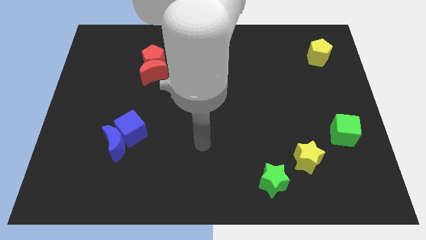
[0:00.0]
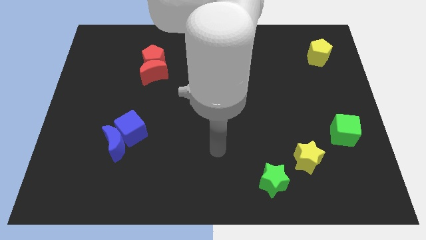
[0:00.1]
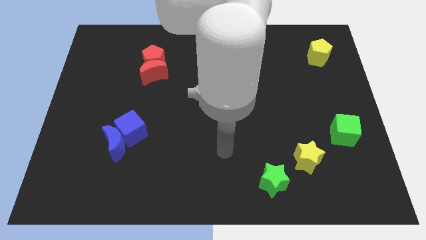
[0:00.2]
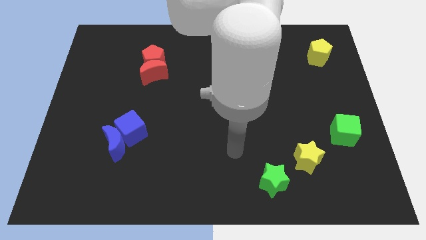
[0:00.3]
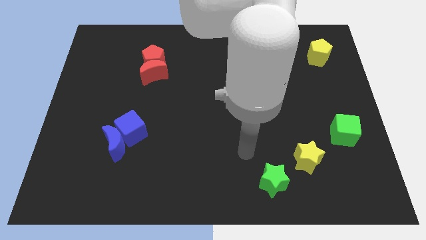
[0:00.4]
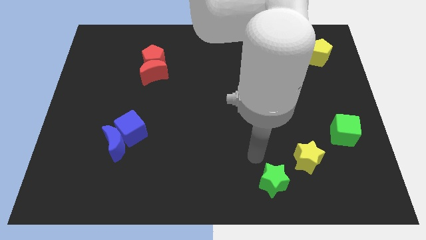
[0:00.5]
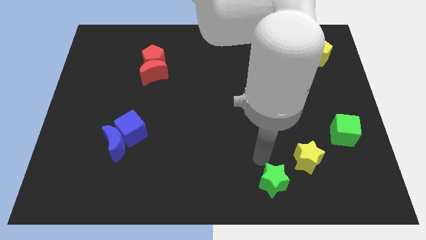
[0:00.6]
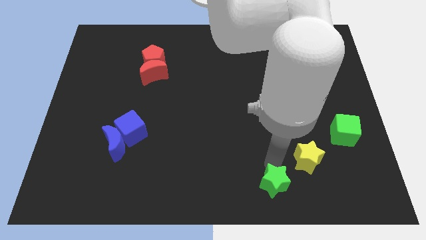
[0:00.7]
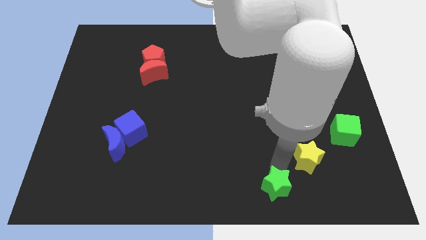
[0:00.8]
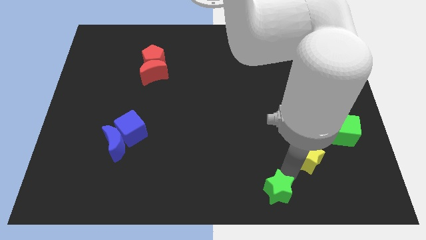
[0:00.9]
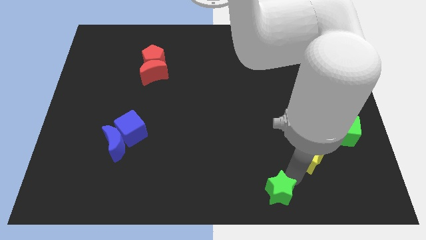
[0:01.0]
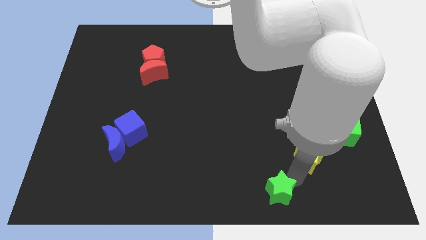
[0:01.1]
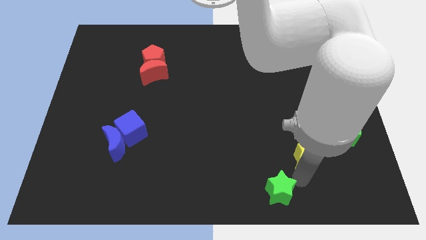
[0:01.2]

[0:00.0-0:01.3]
move the green star slightly to the down

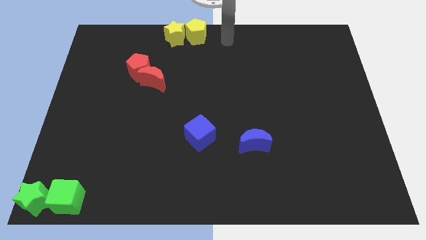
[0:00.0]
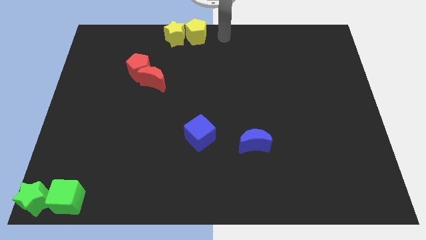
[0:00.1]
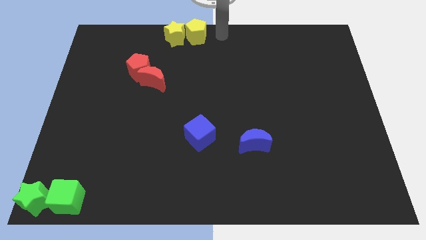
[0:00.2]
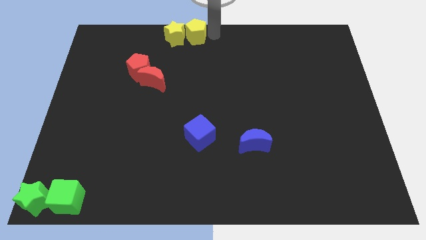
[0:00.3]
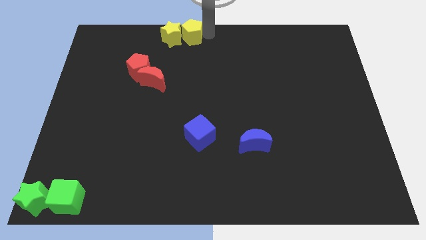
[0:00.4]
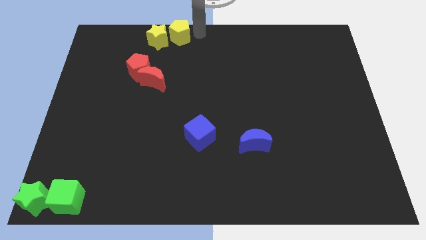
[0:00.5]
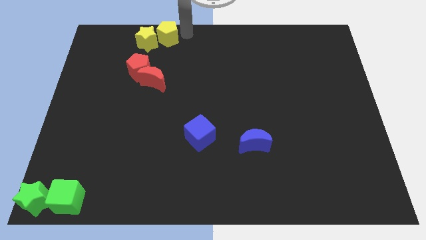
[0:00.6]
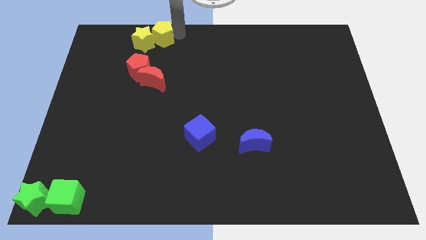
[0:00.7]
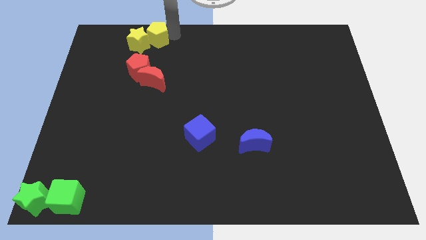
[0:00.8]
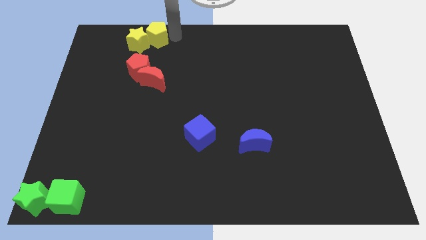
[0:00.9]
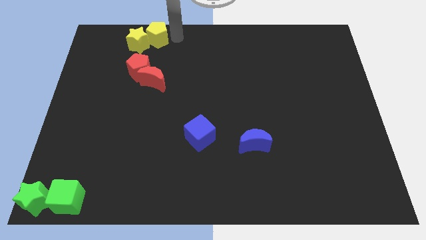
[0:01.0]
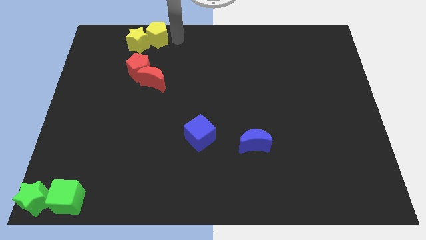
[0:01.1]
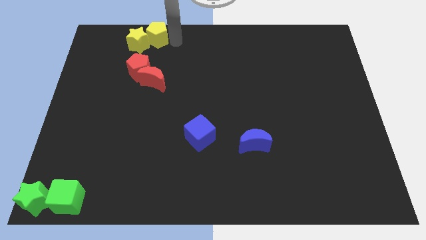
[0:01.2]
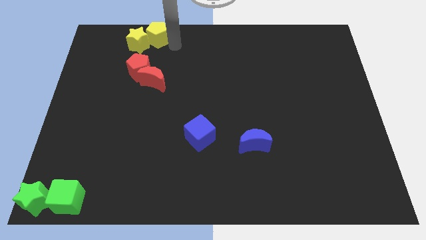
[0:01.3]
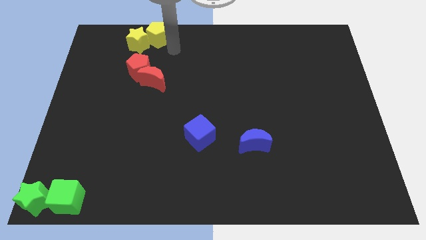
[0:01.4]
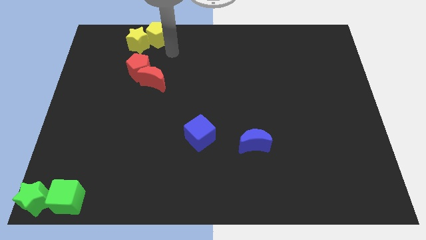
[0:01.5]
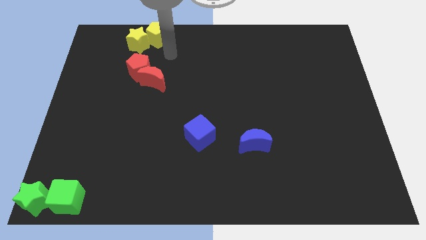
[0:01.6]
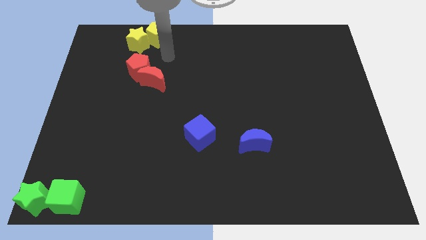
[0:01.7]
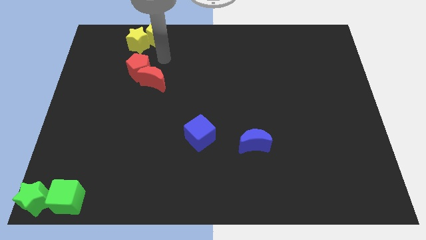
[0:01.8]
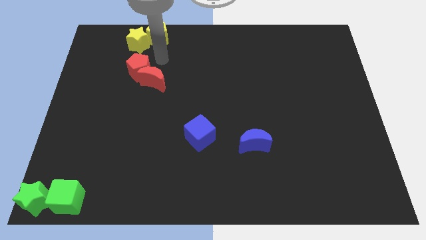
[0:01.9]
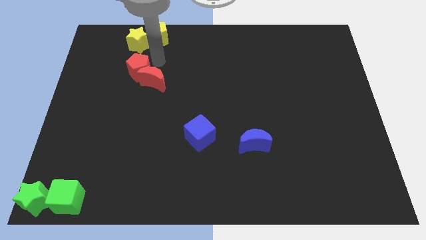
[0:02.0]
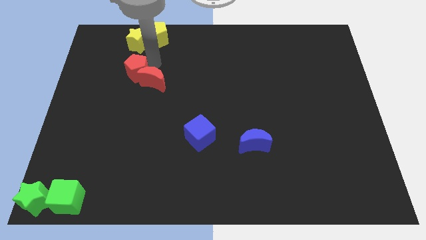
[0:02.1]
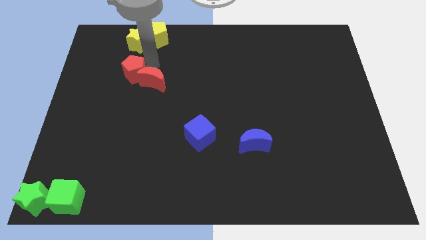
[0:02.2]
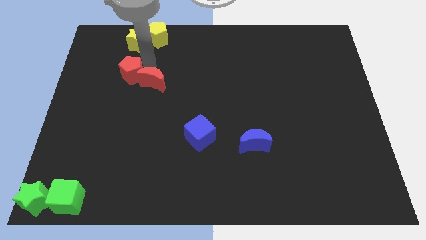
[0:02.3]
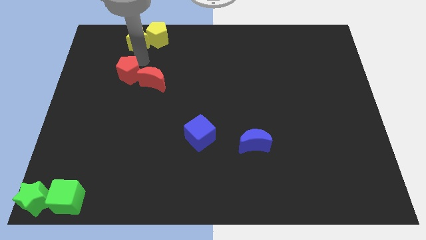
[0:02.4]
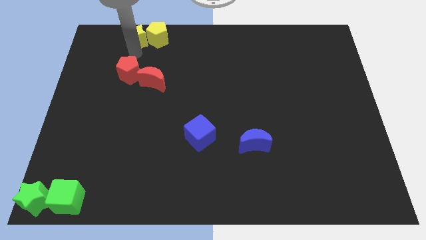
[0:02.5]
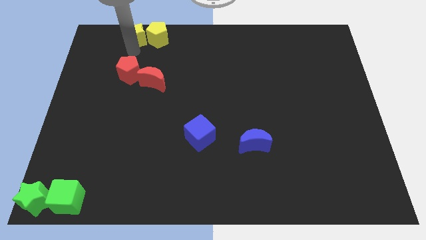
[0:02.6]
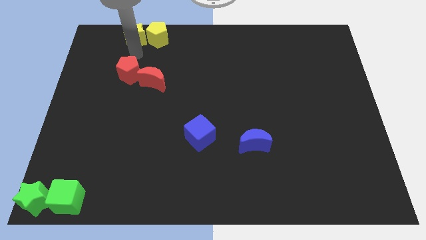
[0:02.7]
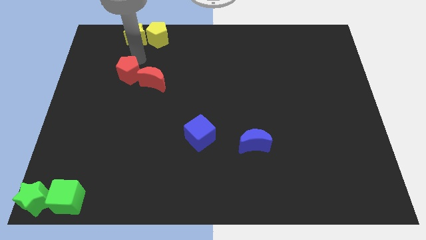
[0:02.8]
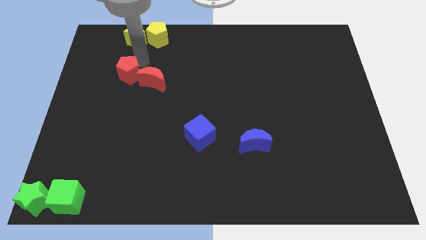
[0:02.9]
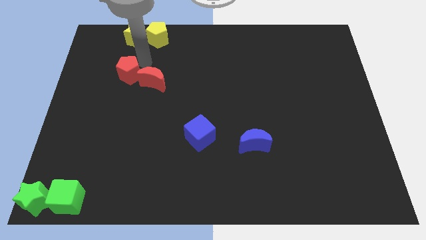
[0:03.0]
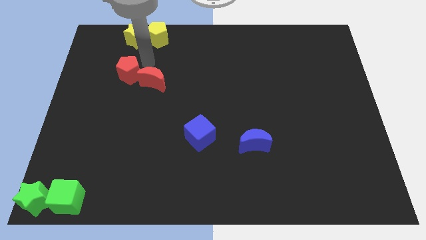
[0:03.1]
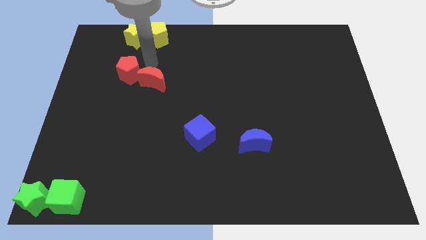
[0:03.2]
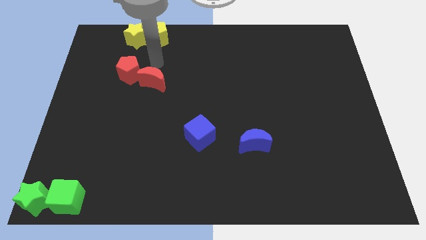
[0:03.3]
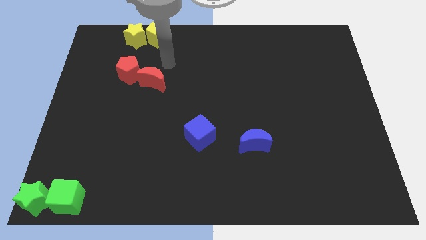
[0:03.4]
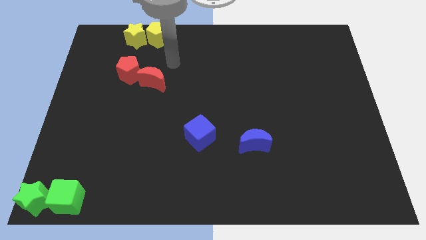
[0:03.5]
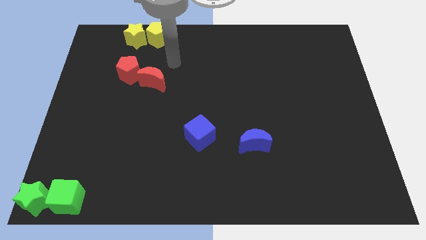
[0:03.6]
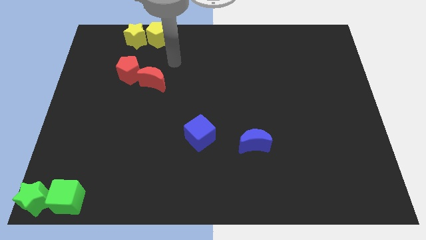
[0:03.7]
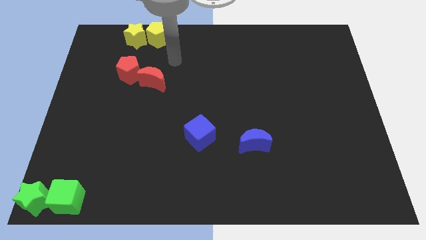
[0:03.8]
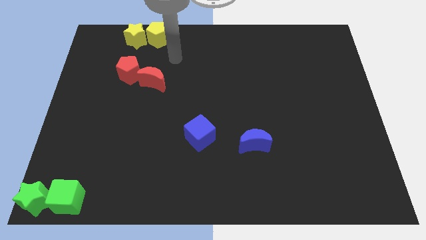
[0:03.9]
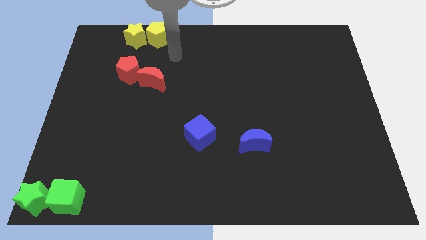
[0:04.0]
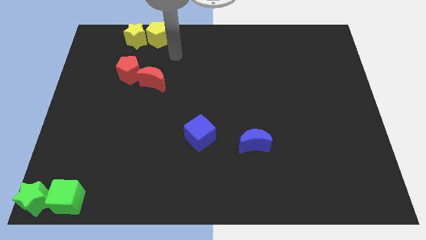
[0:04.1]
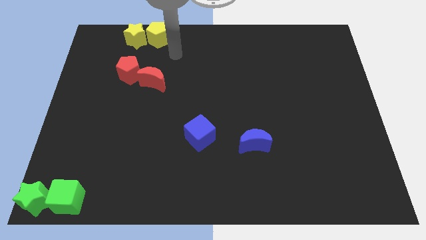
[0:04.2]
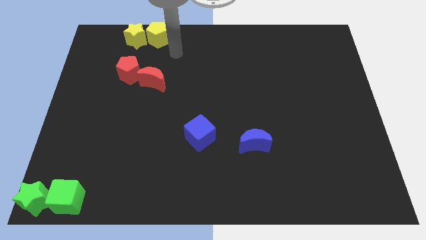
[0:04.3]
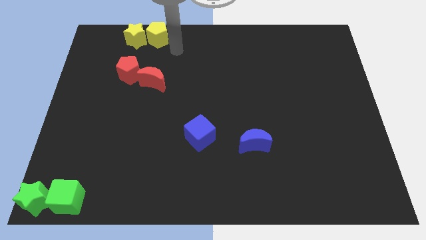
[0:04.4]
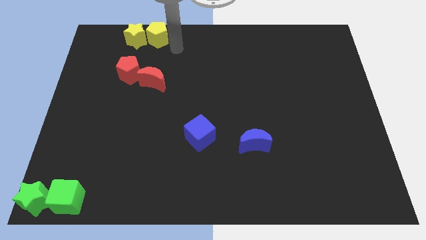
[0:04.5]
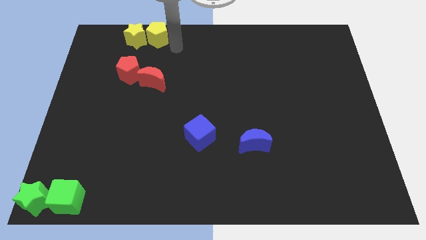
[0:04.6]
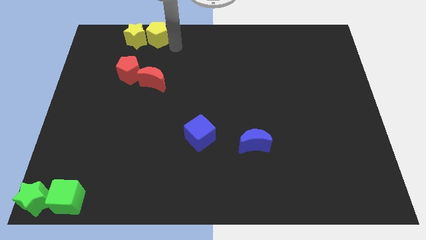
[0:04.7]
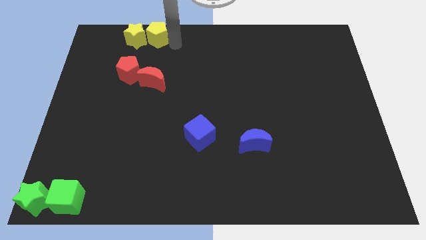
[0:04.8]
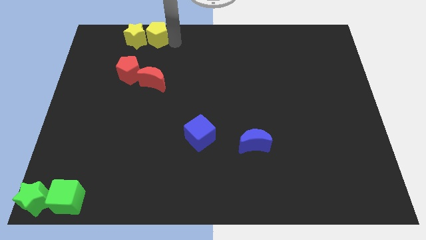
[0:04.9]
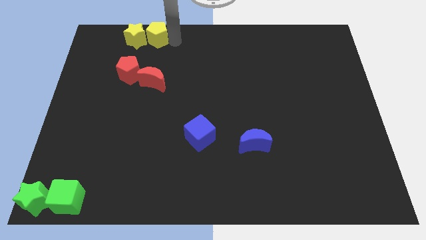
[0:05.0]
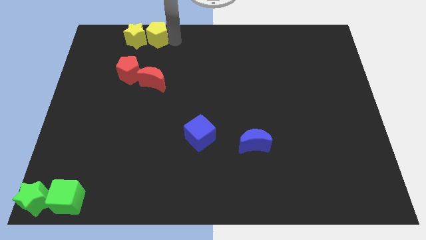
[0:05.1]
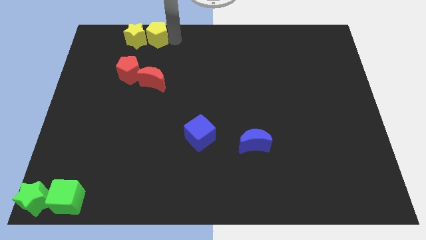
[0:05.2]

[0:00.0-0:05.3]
place the yellow blocks above the red blocks

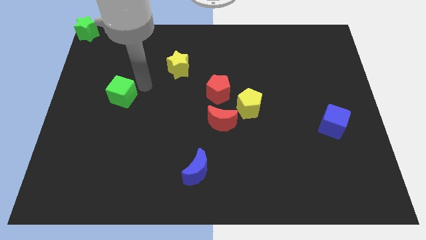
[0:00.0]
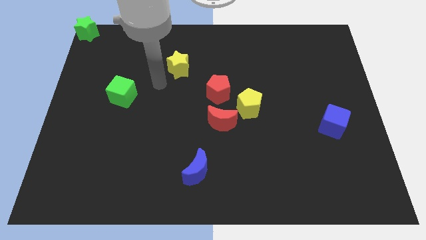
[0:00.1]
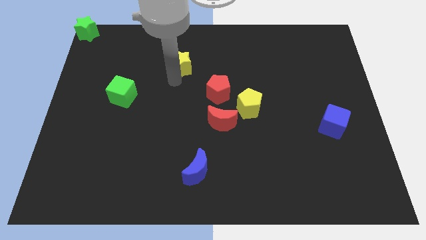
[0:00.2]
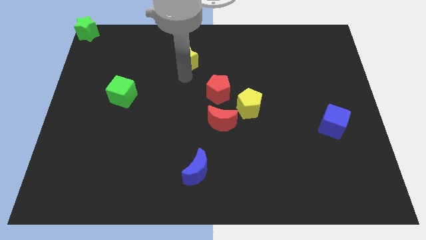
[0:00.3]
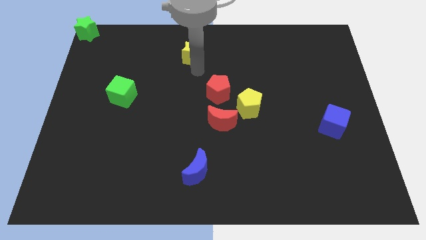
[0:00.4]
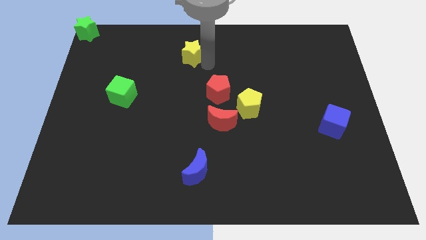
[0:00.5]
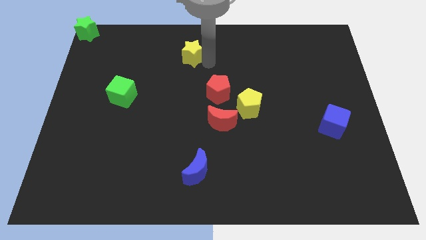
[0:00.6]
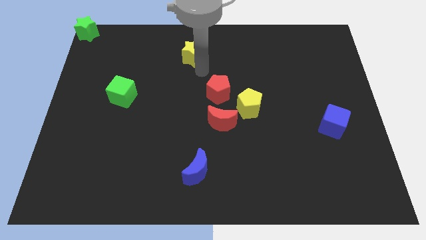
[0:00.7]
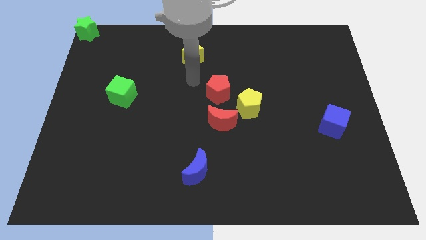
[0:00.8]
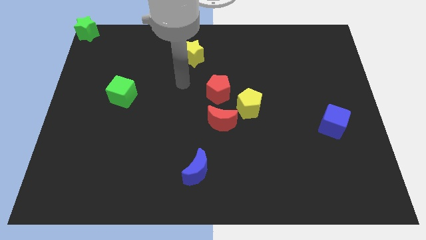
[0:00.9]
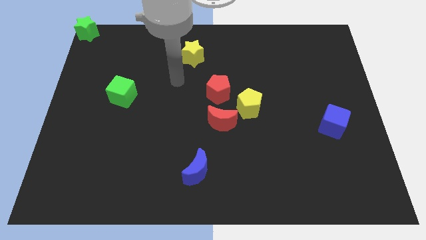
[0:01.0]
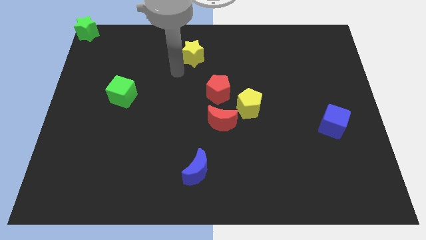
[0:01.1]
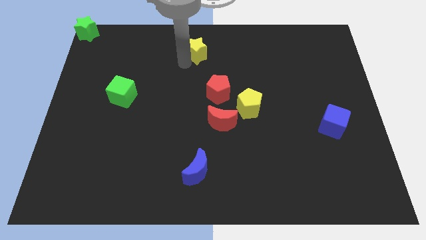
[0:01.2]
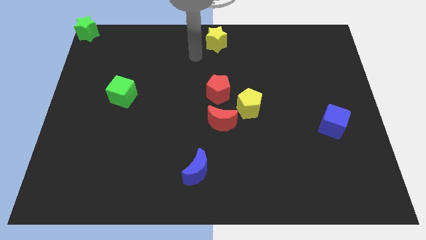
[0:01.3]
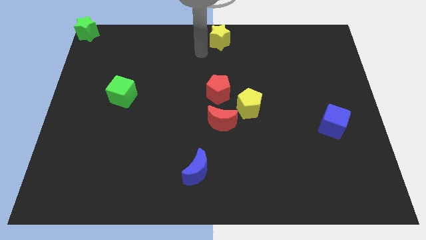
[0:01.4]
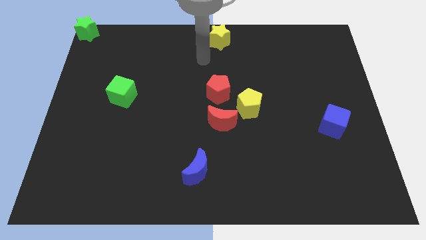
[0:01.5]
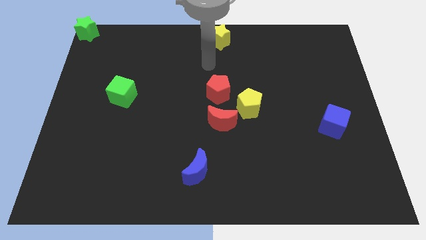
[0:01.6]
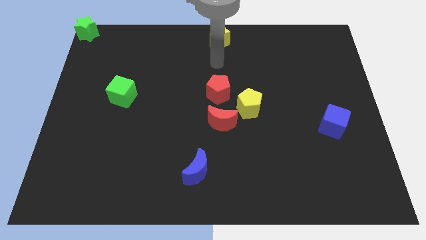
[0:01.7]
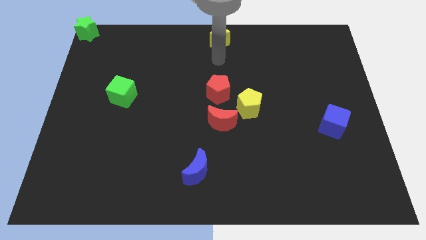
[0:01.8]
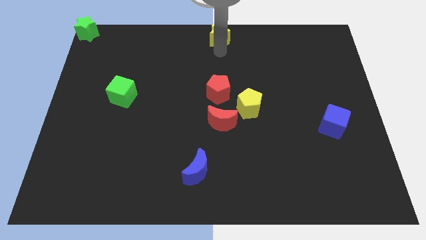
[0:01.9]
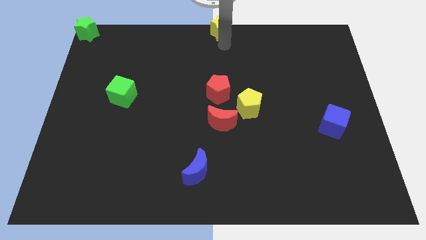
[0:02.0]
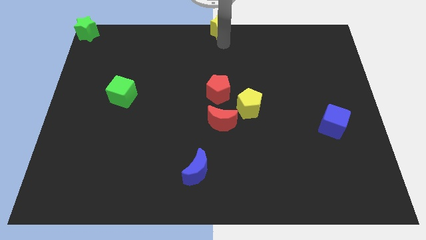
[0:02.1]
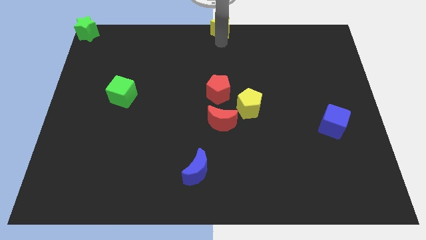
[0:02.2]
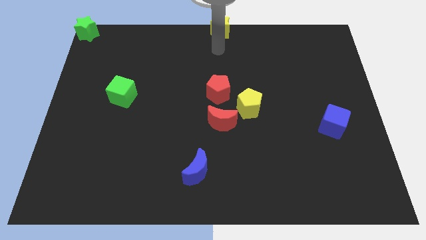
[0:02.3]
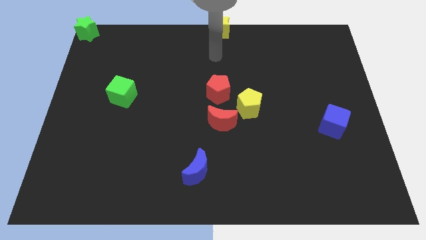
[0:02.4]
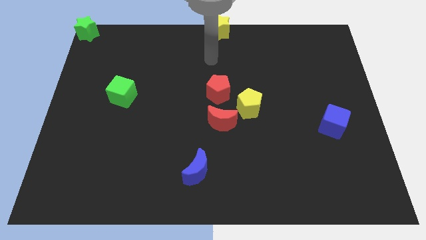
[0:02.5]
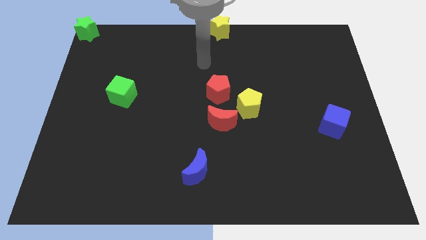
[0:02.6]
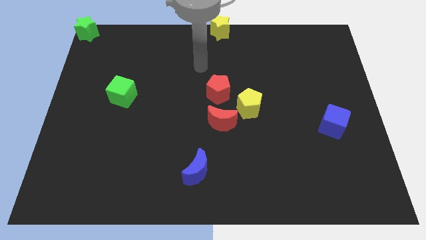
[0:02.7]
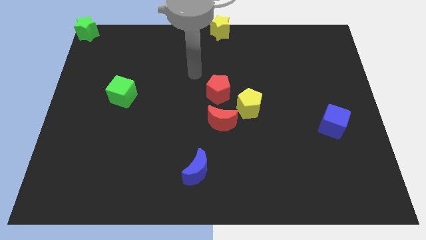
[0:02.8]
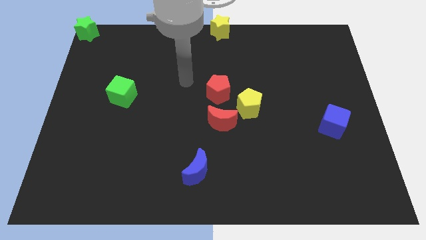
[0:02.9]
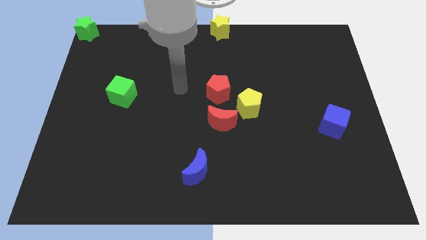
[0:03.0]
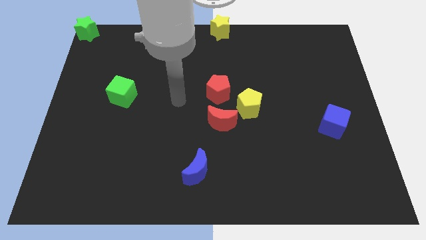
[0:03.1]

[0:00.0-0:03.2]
place yellow star to the top center of the board
